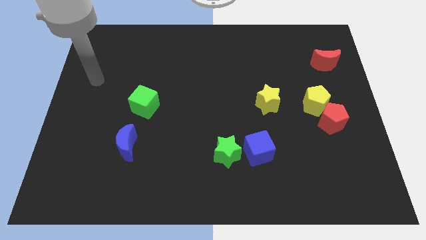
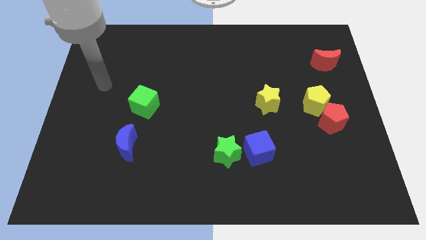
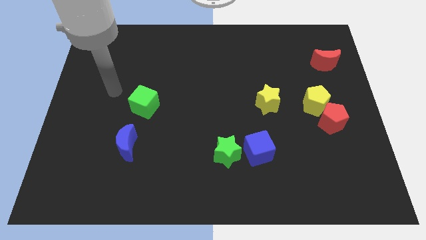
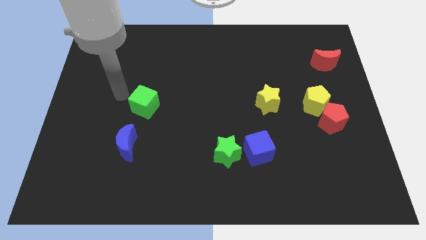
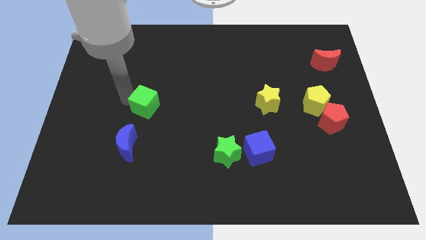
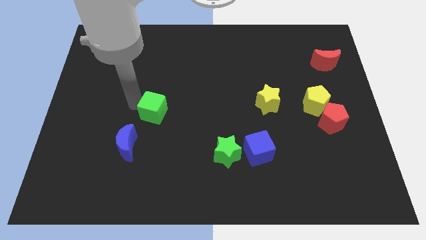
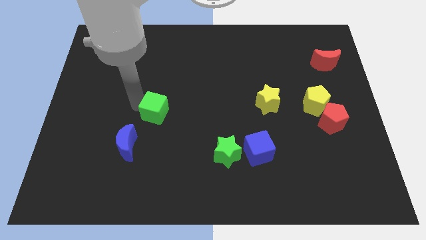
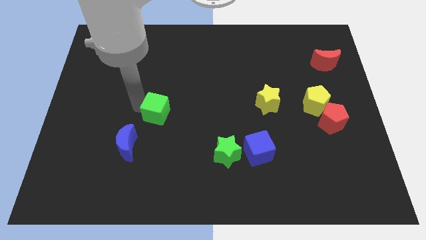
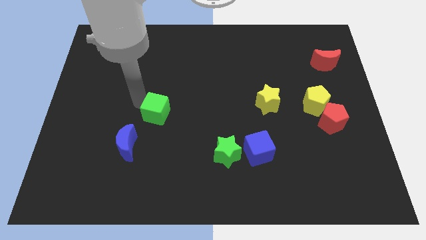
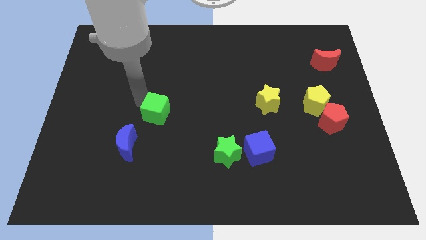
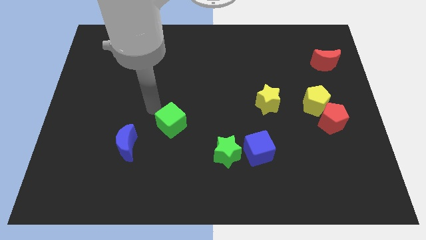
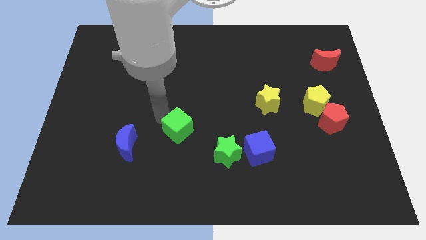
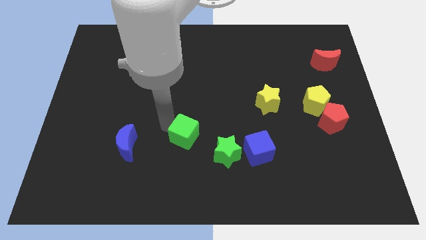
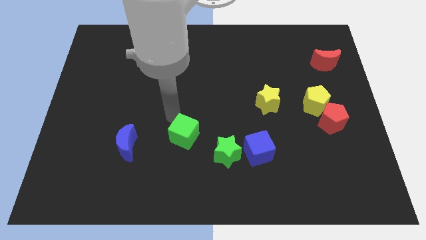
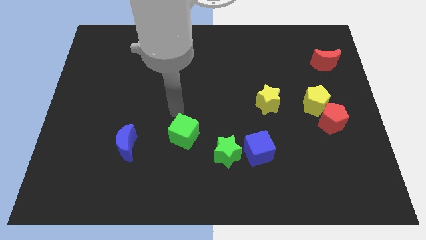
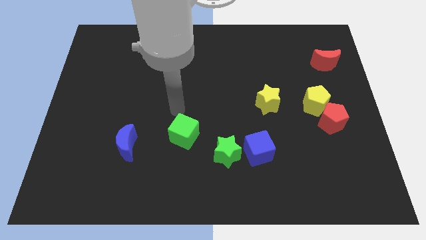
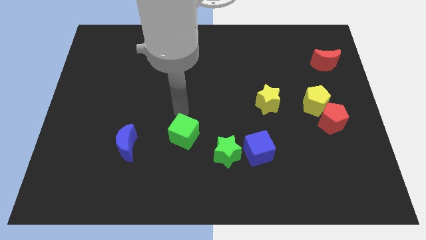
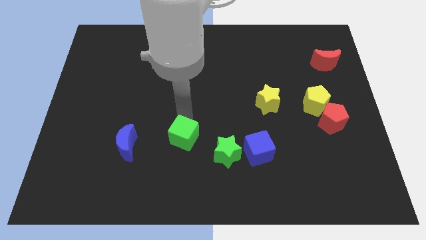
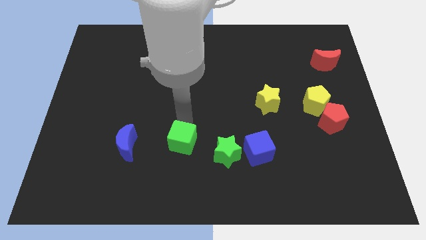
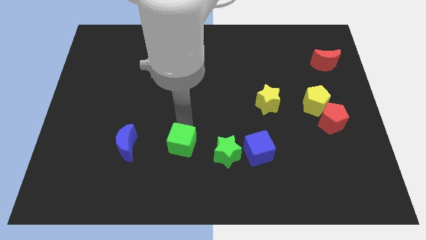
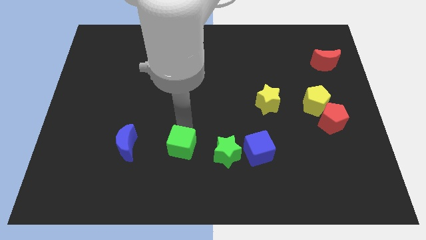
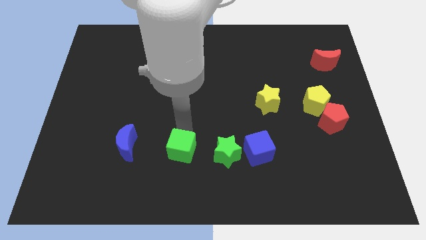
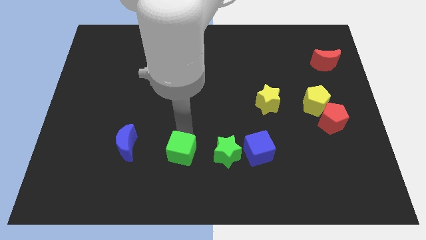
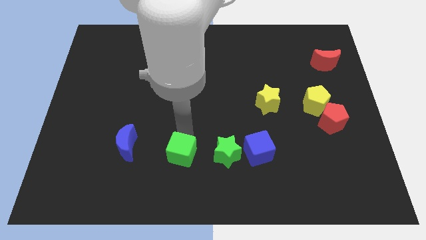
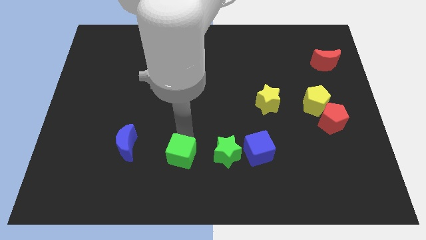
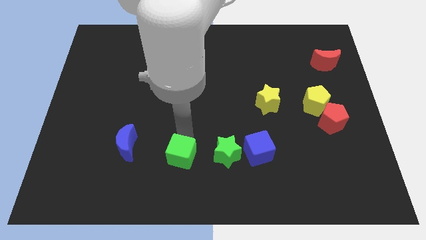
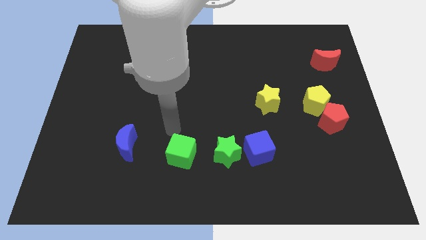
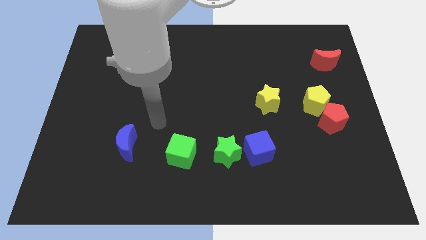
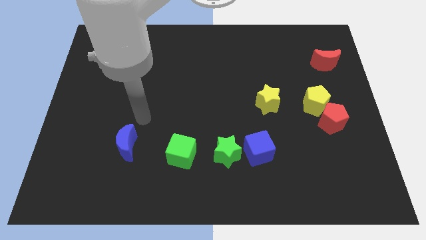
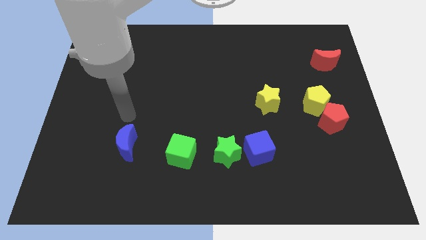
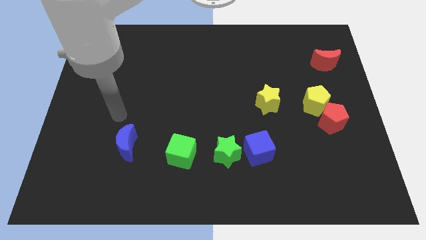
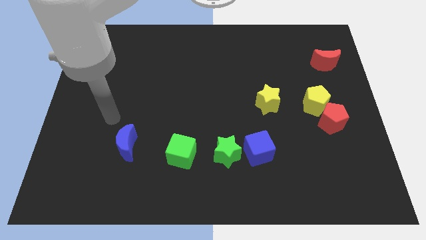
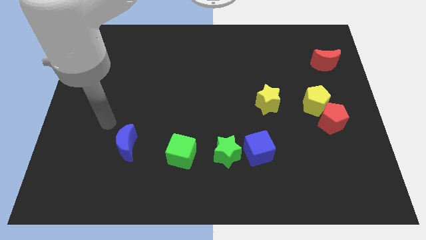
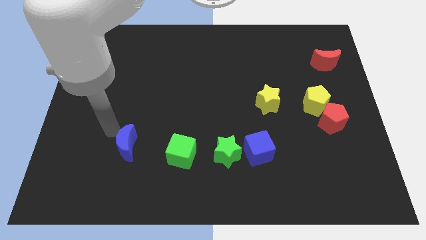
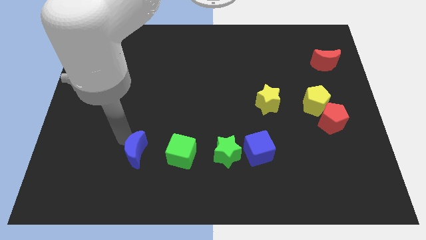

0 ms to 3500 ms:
move green cube between the green star and blue moon

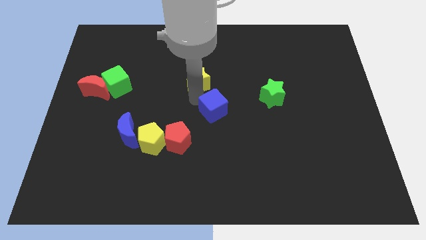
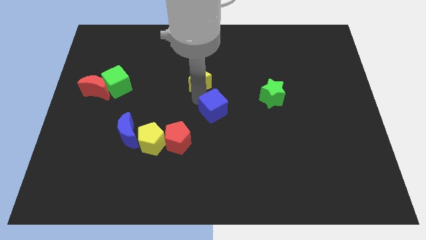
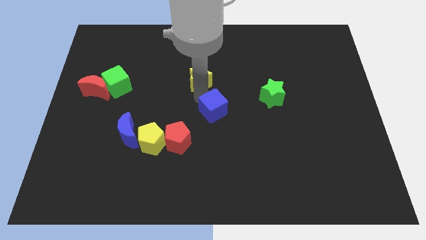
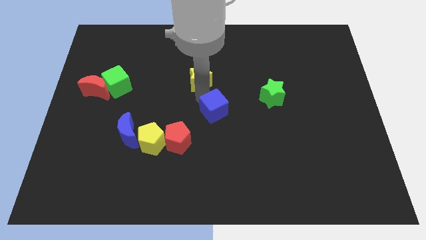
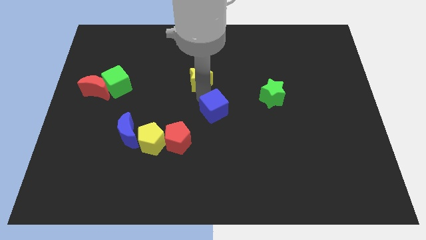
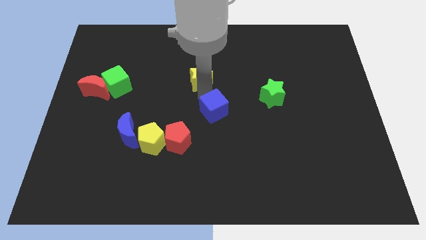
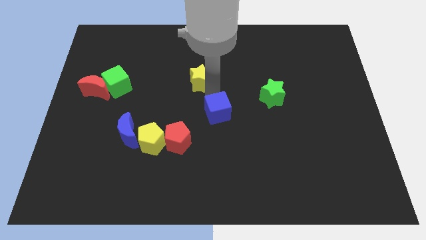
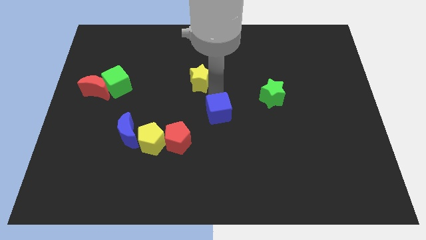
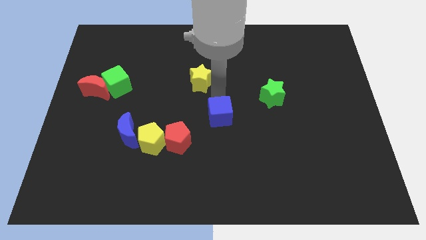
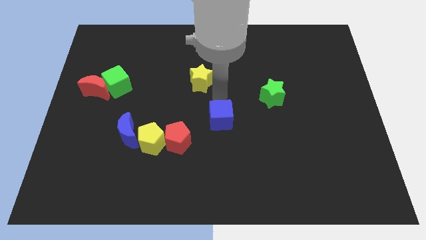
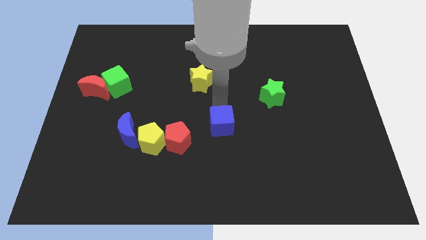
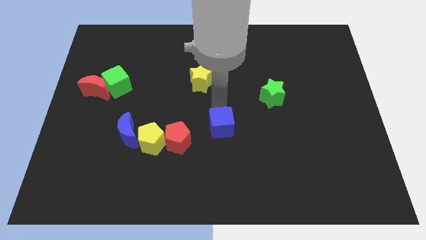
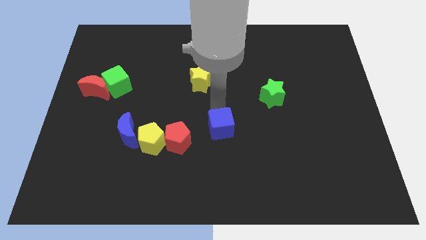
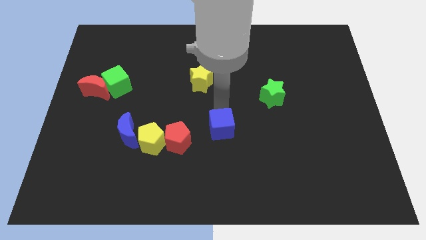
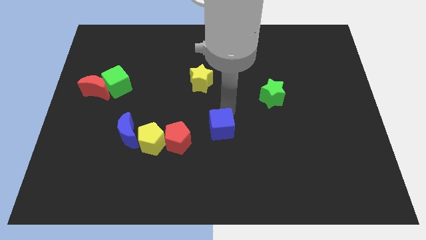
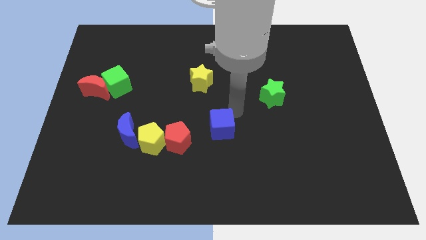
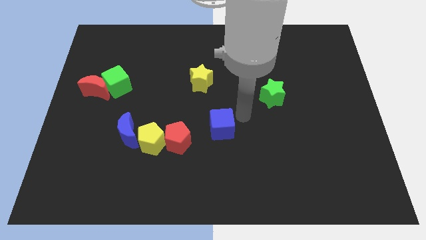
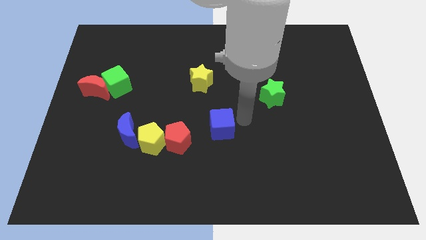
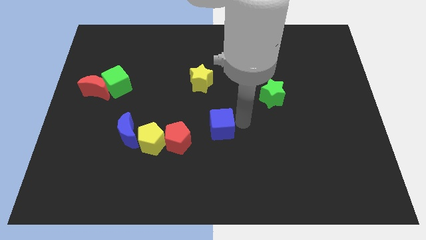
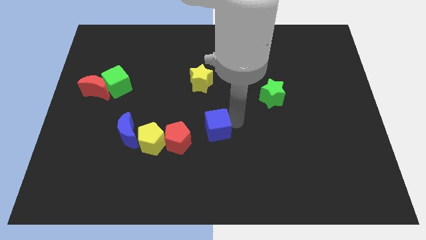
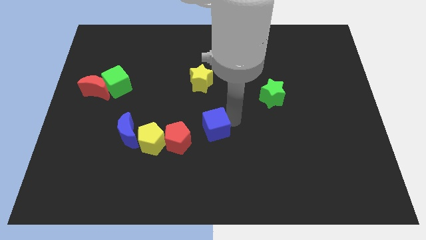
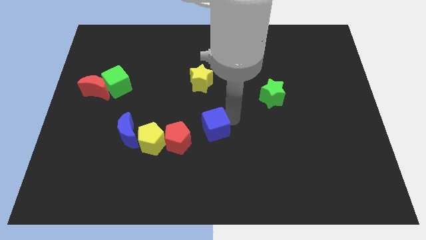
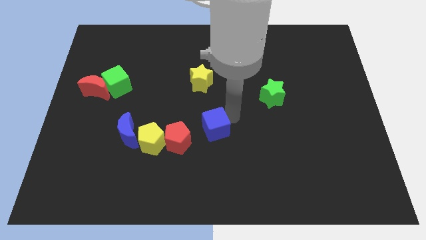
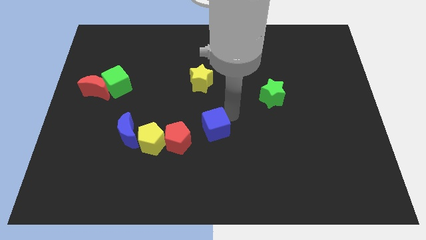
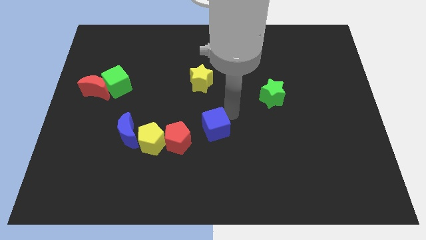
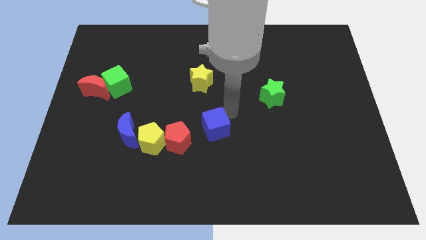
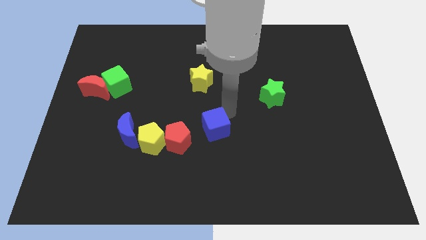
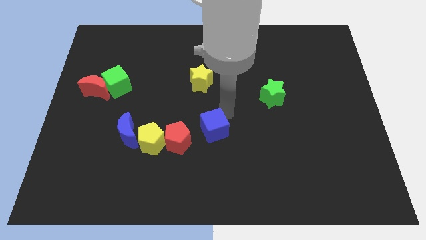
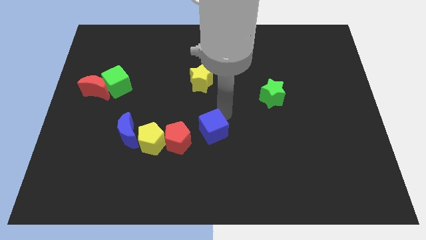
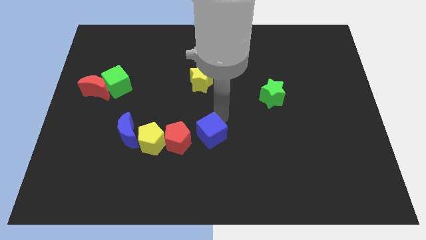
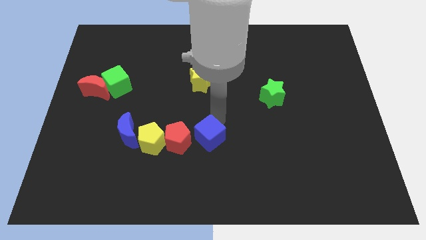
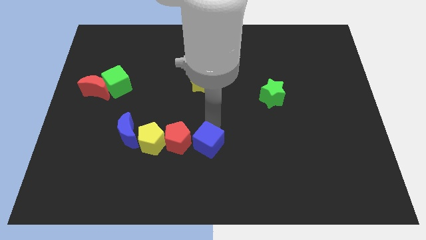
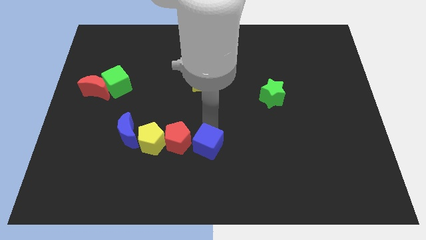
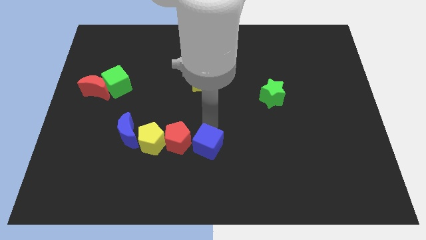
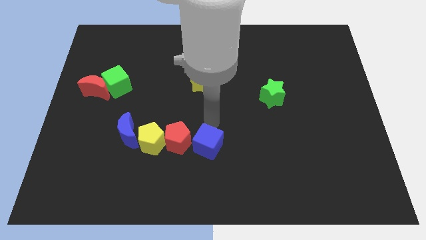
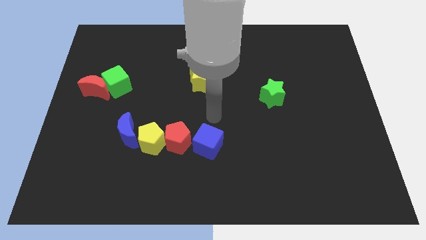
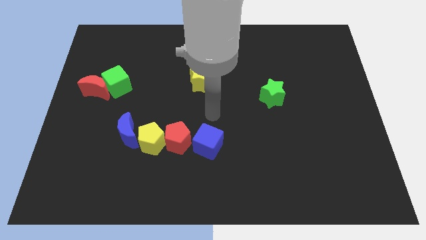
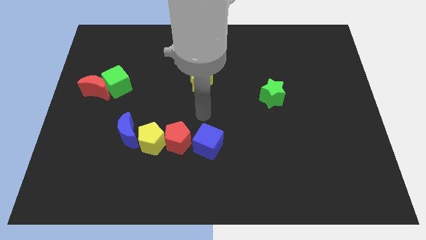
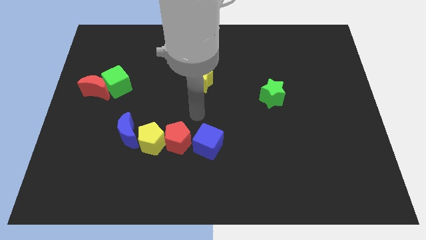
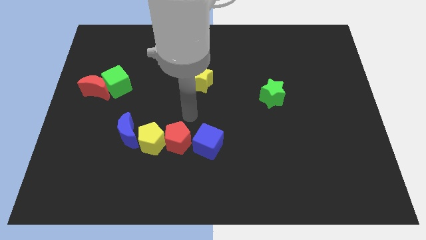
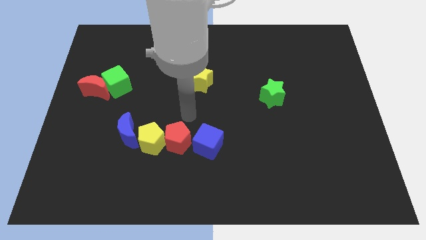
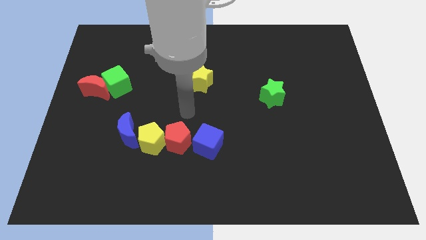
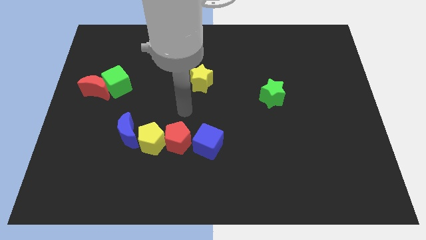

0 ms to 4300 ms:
move the blue cube right to the red pentagon

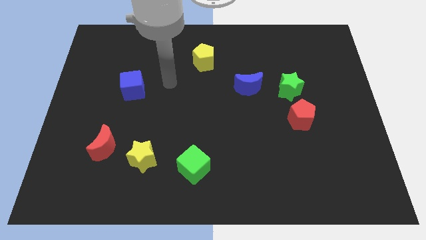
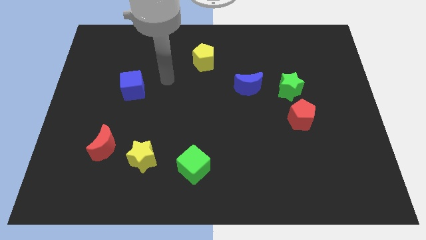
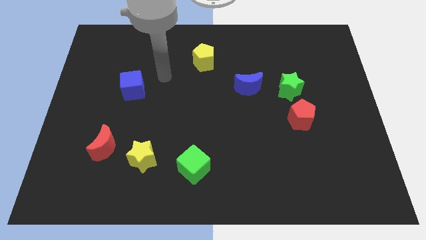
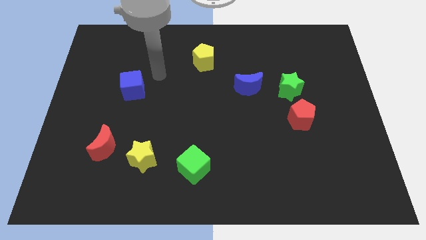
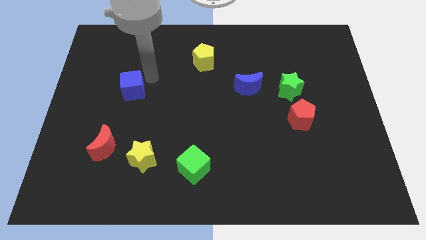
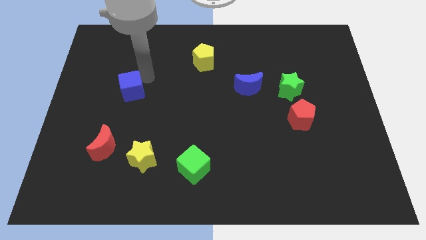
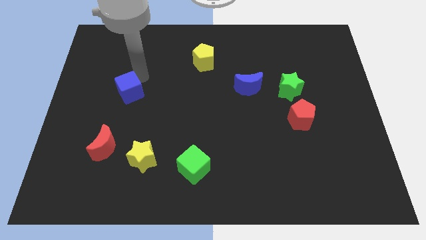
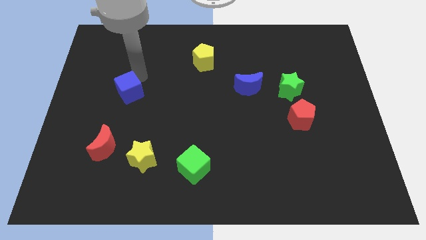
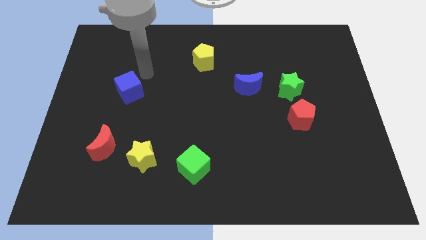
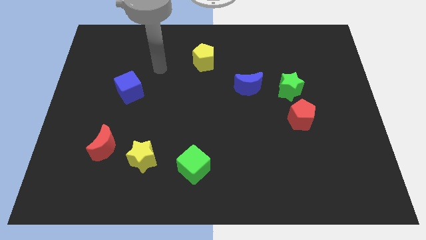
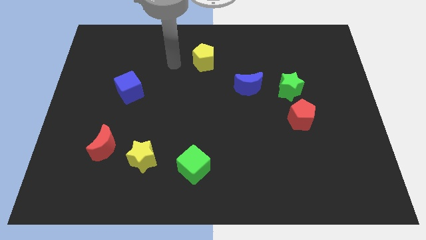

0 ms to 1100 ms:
slightly push the blue cube towards the bottom of the board slightly
